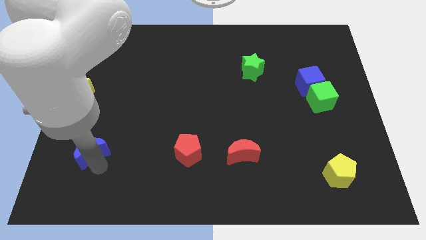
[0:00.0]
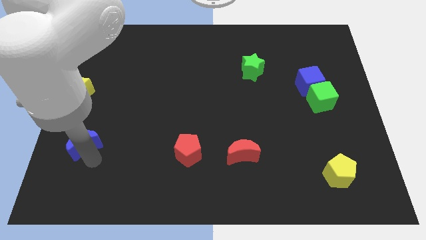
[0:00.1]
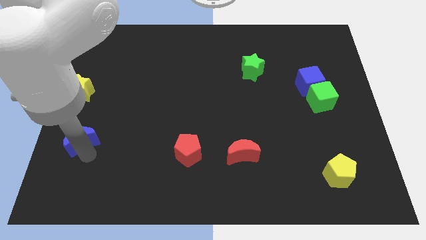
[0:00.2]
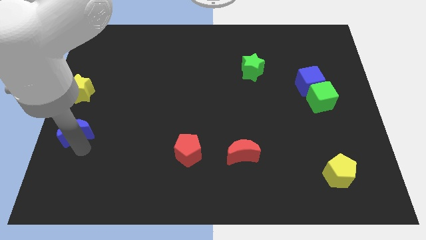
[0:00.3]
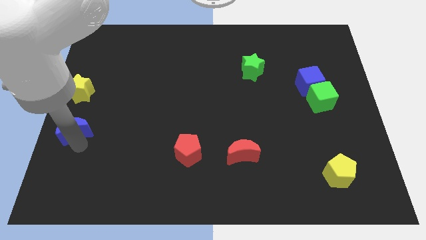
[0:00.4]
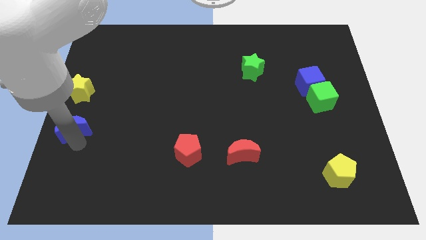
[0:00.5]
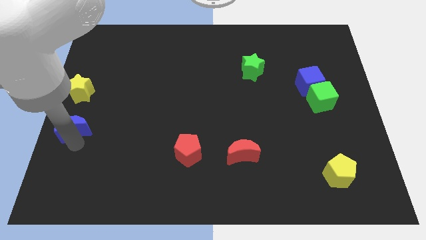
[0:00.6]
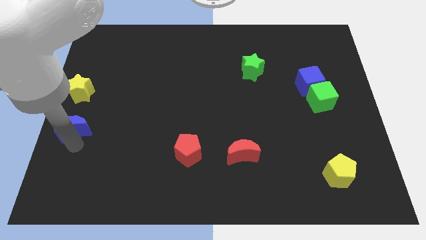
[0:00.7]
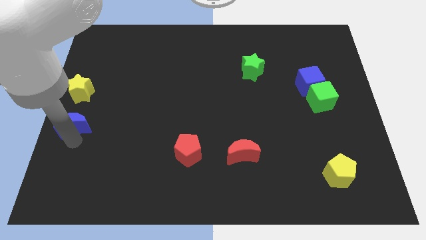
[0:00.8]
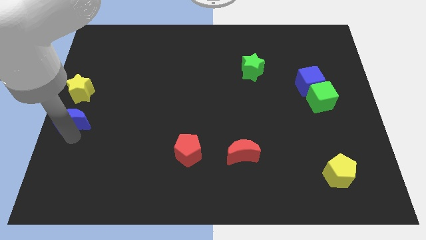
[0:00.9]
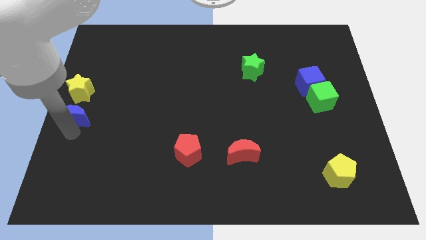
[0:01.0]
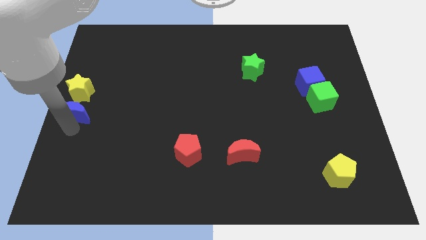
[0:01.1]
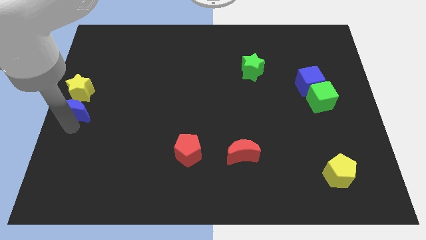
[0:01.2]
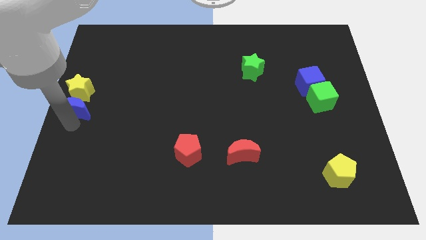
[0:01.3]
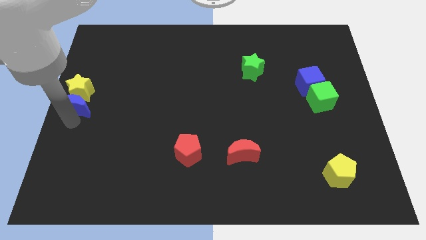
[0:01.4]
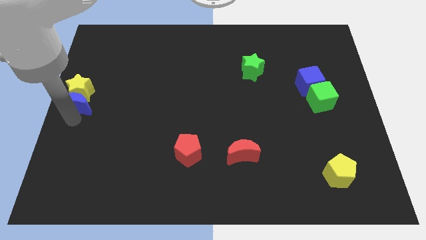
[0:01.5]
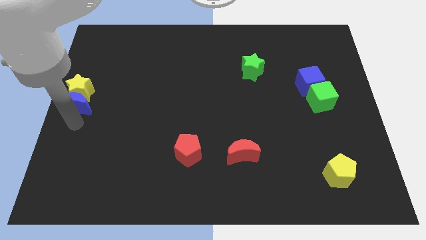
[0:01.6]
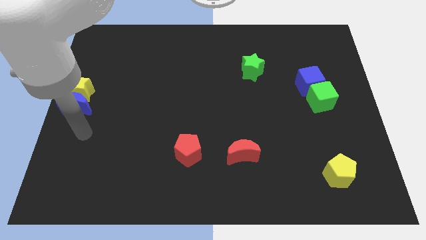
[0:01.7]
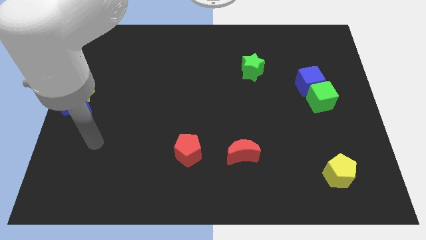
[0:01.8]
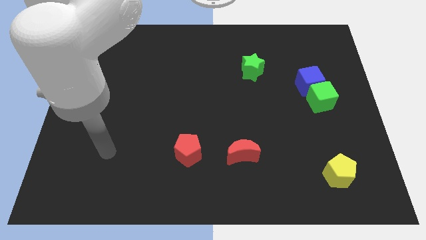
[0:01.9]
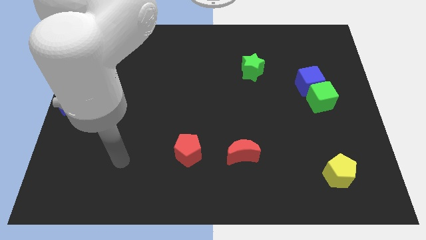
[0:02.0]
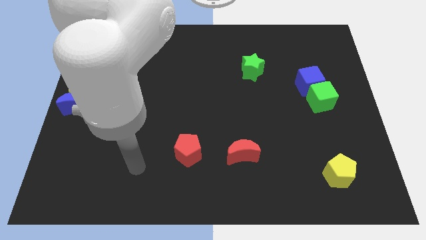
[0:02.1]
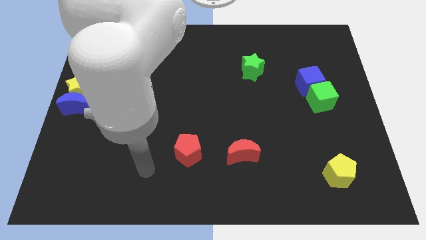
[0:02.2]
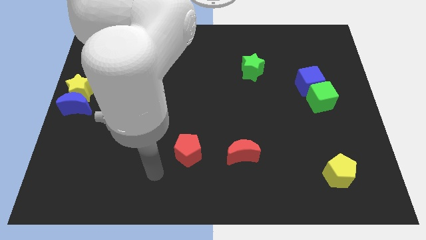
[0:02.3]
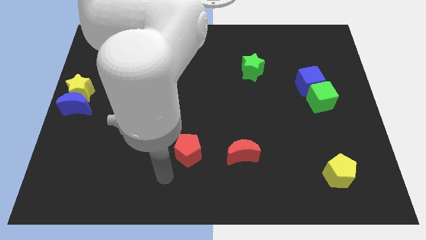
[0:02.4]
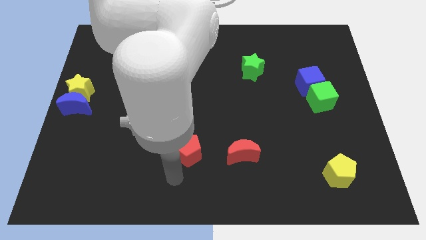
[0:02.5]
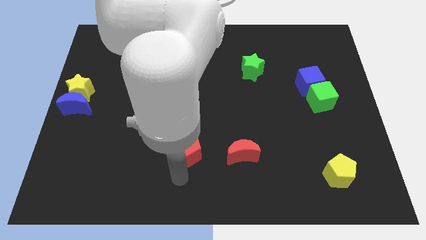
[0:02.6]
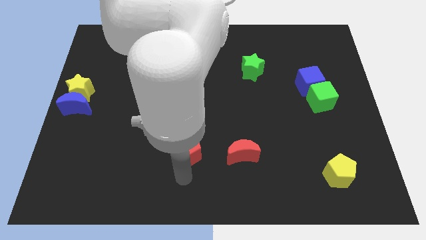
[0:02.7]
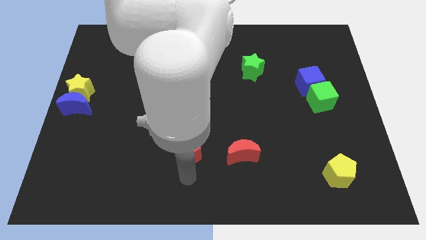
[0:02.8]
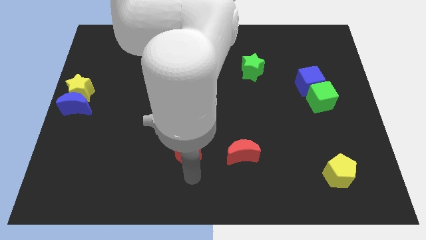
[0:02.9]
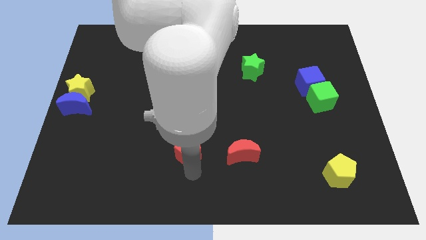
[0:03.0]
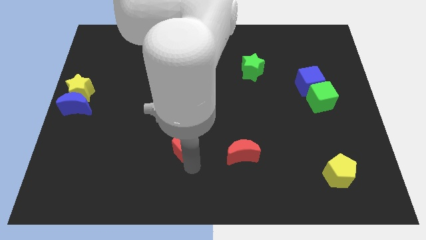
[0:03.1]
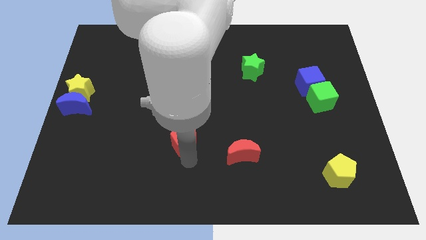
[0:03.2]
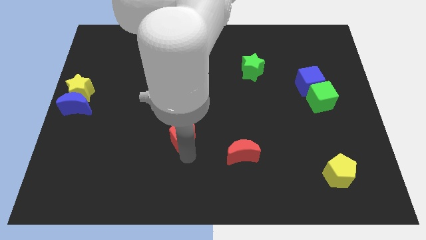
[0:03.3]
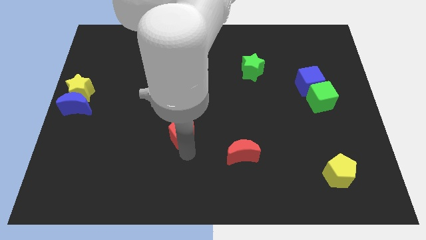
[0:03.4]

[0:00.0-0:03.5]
slide the blue crescent into the yellow star

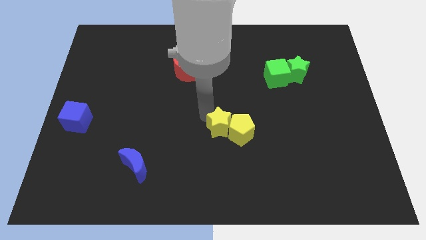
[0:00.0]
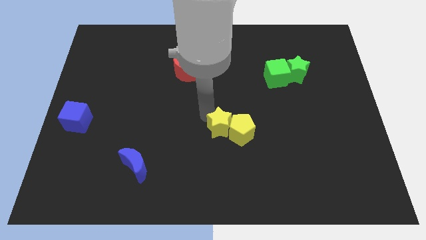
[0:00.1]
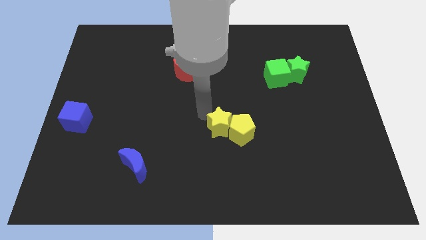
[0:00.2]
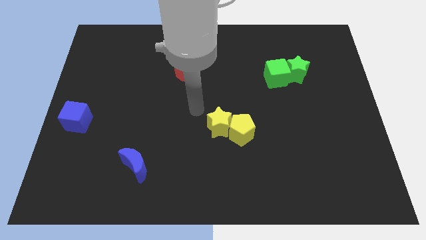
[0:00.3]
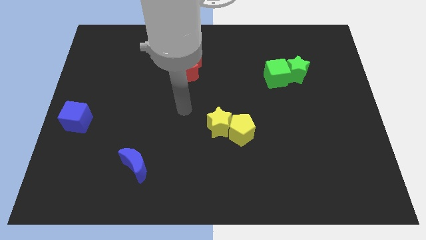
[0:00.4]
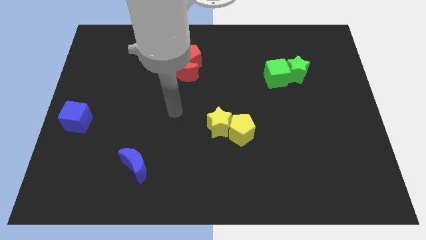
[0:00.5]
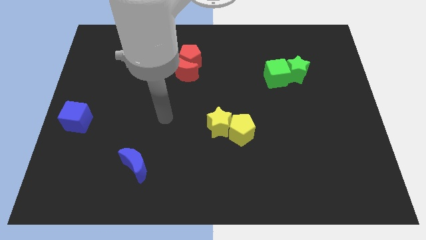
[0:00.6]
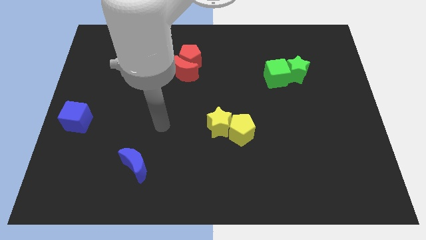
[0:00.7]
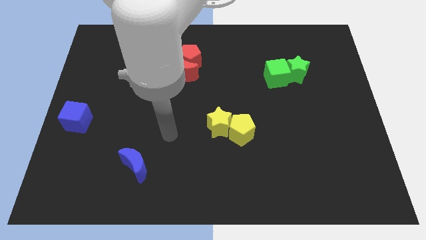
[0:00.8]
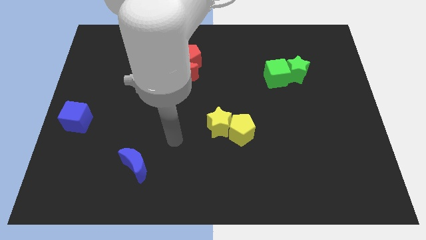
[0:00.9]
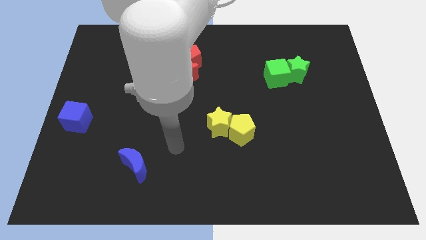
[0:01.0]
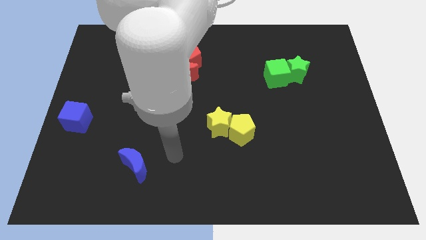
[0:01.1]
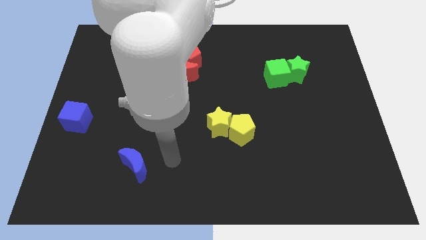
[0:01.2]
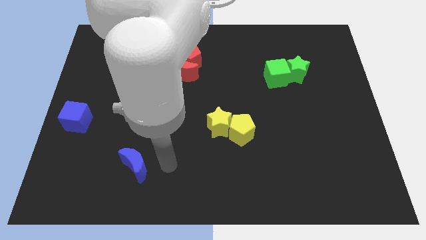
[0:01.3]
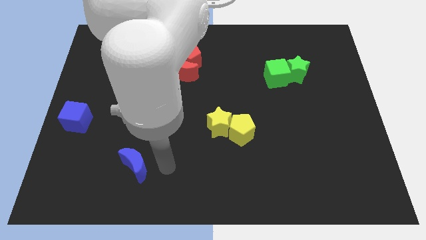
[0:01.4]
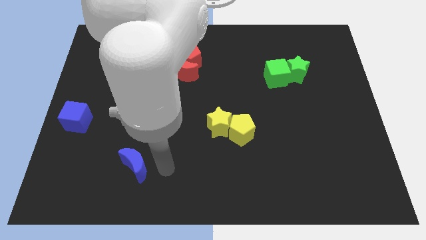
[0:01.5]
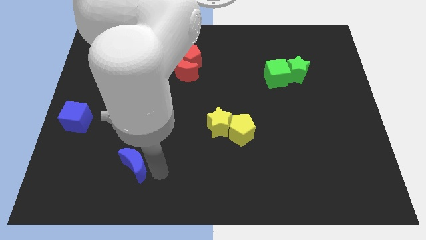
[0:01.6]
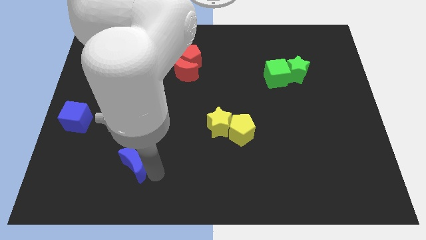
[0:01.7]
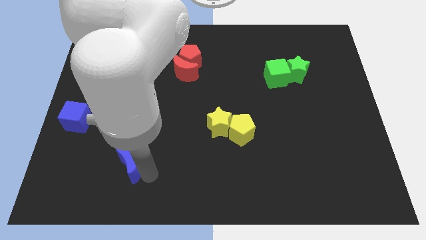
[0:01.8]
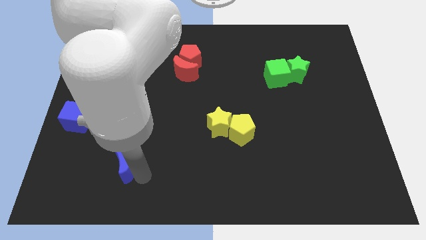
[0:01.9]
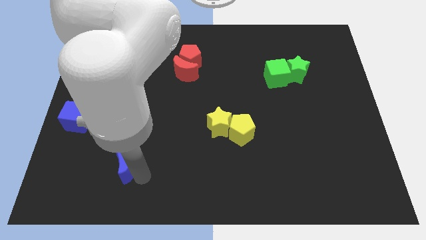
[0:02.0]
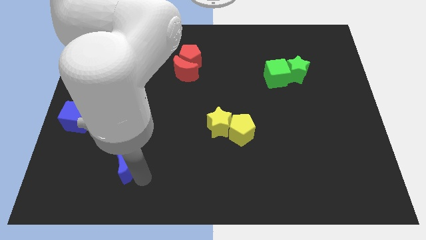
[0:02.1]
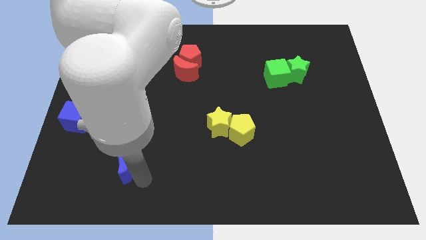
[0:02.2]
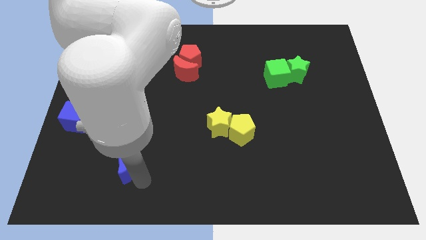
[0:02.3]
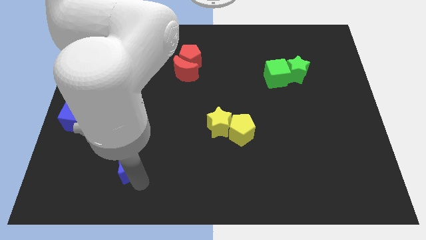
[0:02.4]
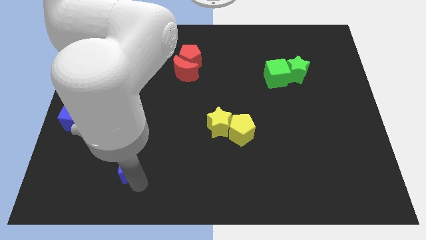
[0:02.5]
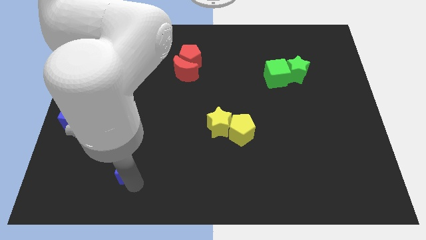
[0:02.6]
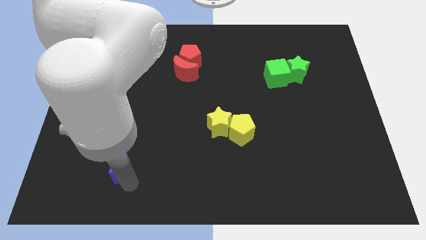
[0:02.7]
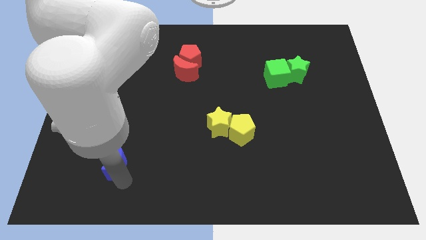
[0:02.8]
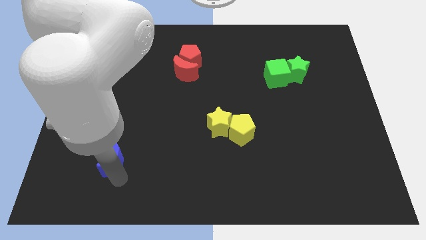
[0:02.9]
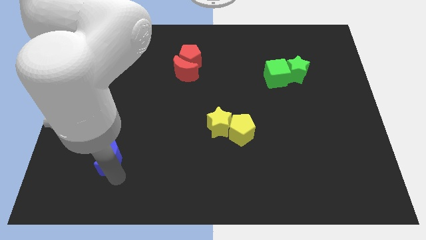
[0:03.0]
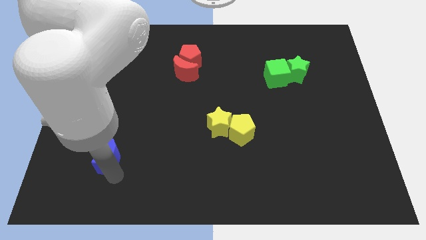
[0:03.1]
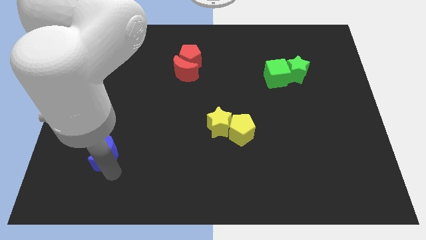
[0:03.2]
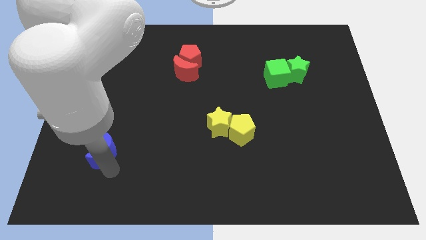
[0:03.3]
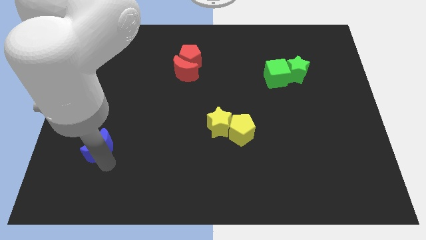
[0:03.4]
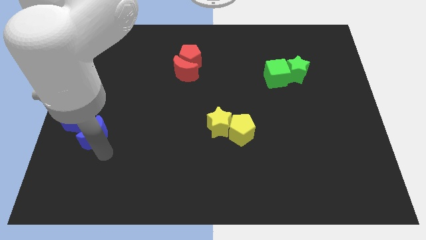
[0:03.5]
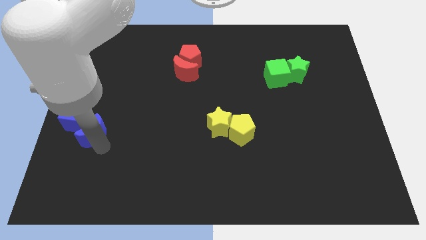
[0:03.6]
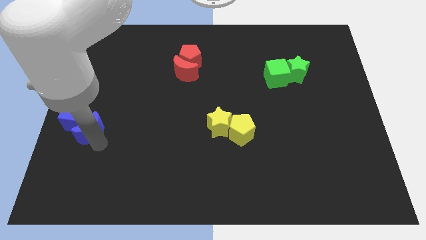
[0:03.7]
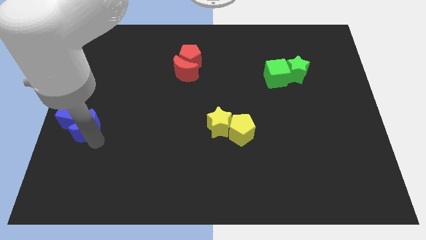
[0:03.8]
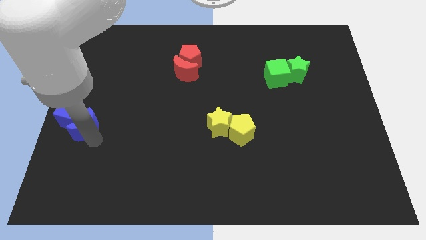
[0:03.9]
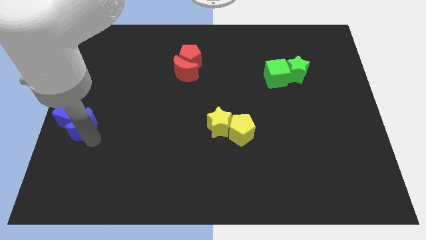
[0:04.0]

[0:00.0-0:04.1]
move the blue crescent into the blue cube

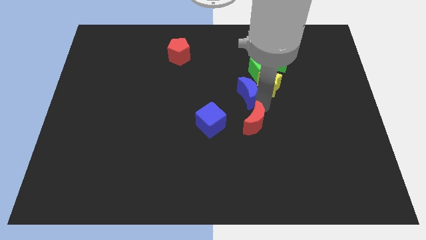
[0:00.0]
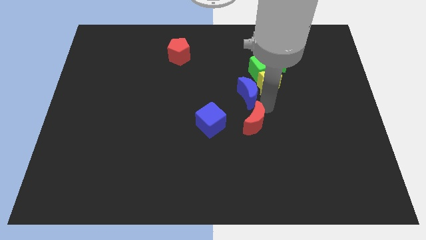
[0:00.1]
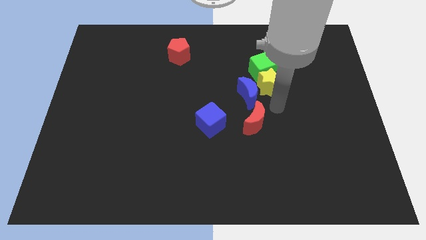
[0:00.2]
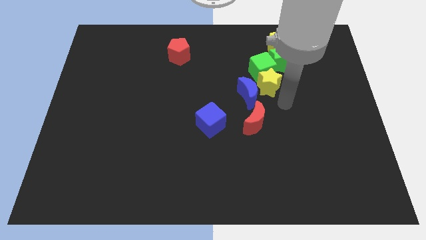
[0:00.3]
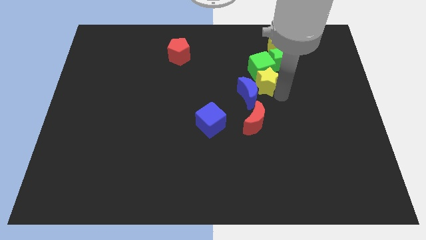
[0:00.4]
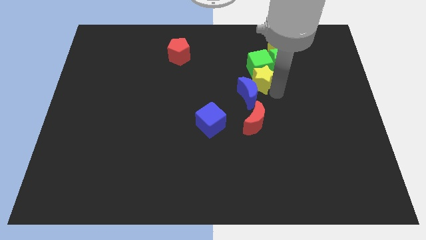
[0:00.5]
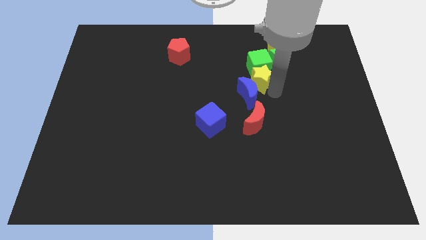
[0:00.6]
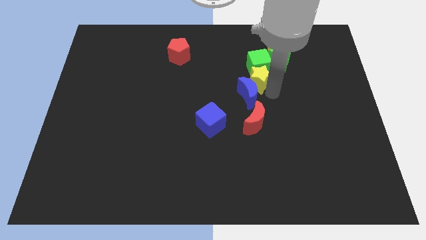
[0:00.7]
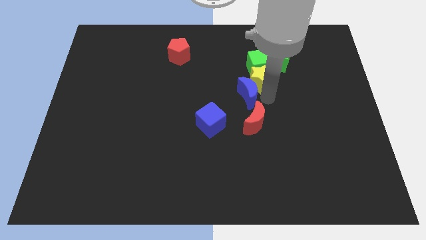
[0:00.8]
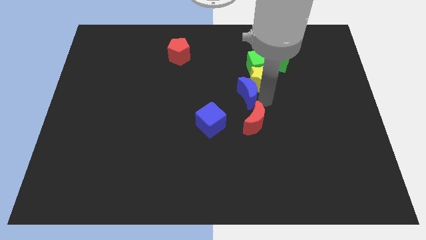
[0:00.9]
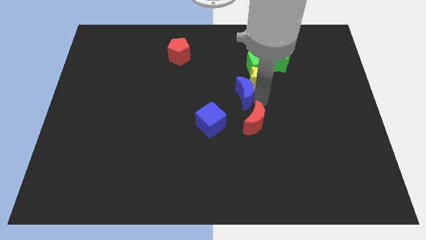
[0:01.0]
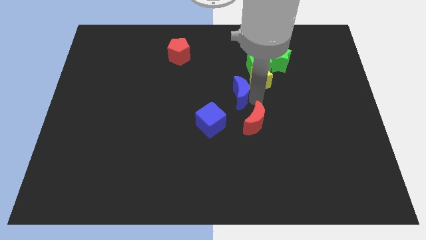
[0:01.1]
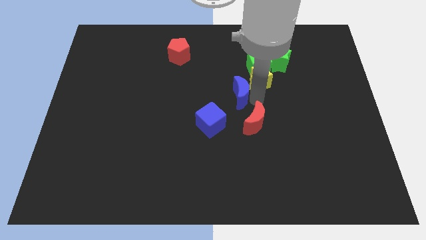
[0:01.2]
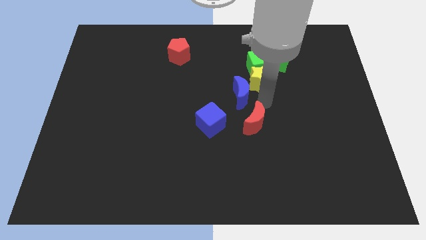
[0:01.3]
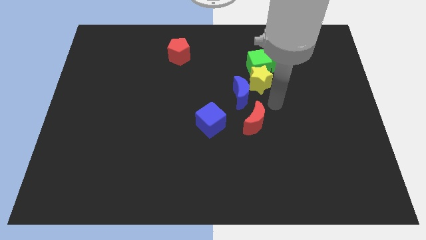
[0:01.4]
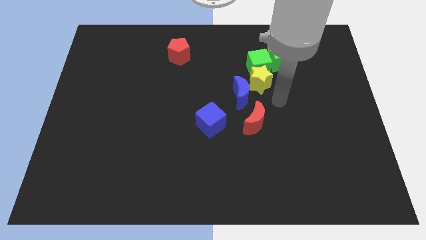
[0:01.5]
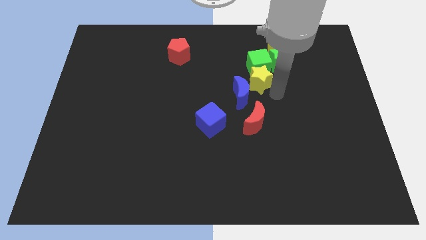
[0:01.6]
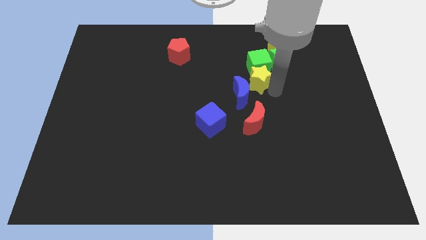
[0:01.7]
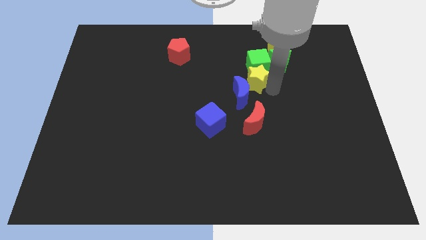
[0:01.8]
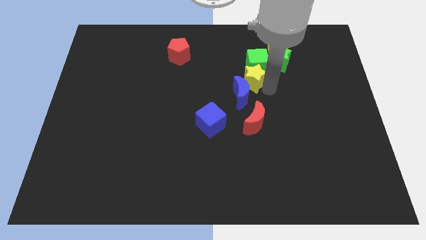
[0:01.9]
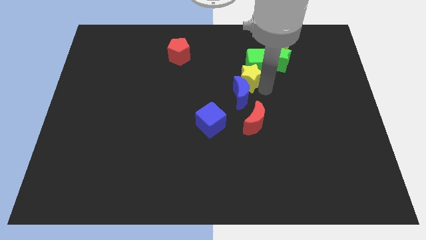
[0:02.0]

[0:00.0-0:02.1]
separate blue moon from red moon
